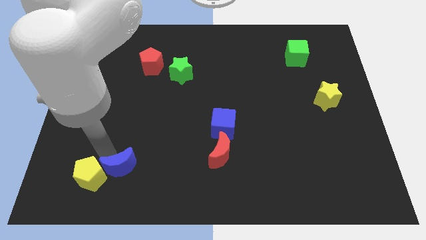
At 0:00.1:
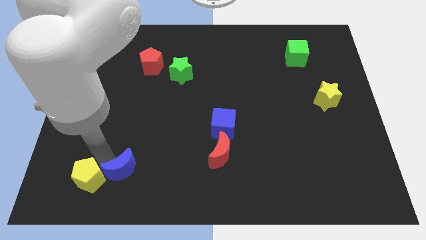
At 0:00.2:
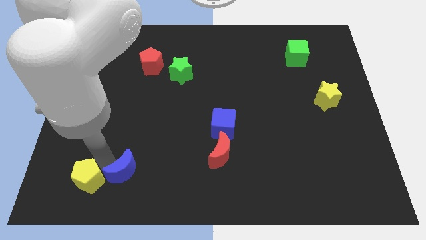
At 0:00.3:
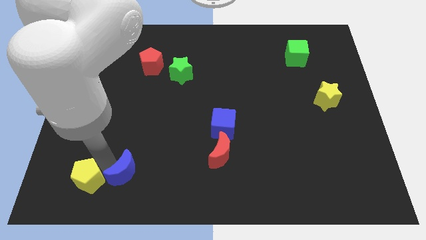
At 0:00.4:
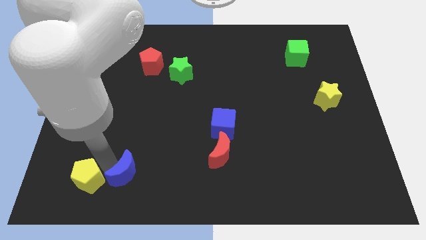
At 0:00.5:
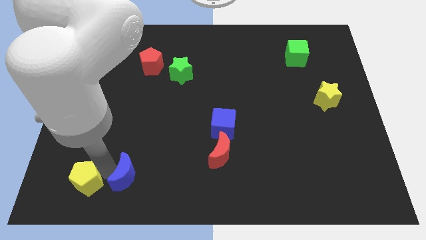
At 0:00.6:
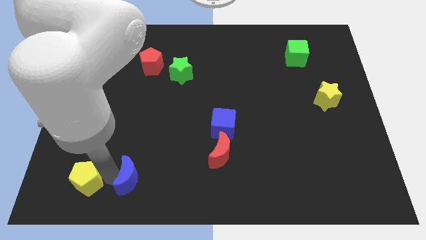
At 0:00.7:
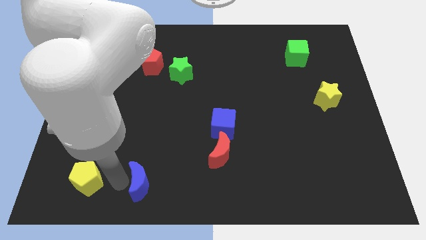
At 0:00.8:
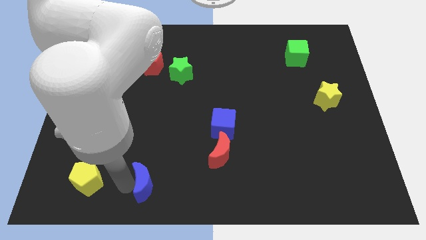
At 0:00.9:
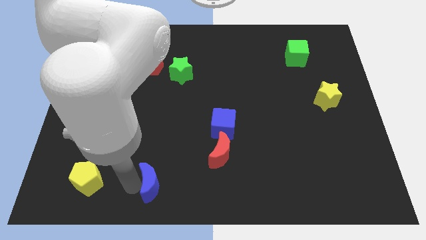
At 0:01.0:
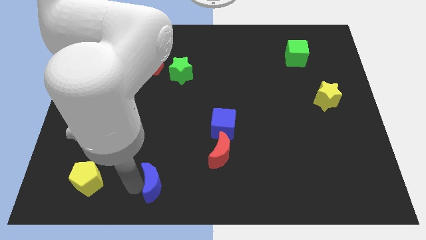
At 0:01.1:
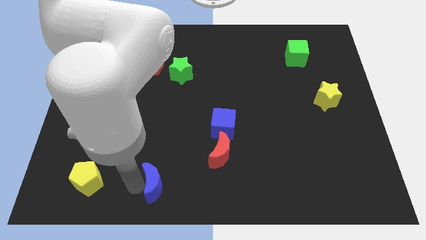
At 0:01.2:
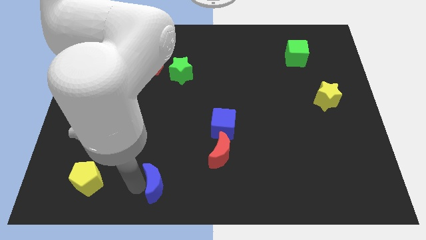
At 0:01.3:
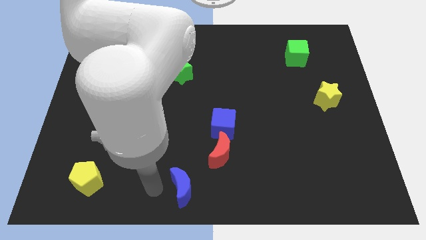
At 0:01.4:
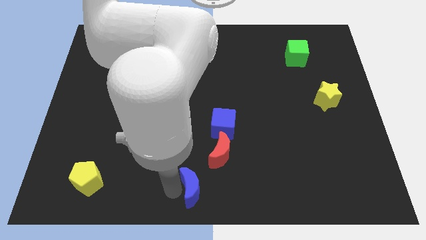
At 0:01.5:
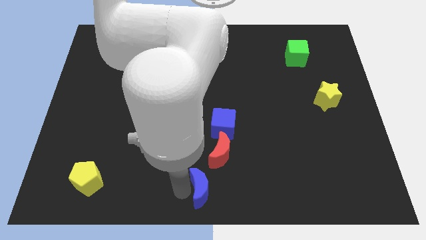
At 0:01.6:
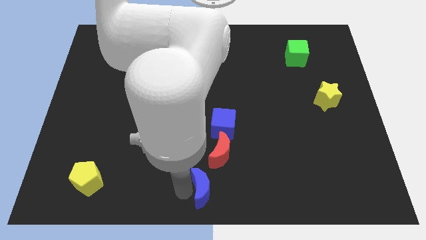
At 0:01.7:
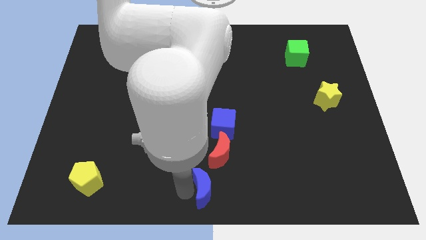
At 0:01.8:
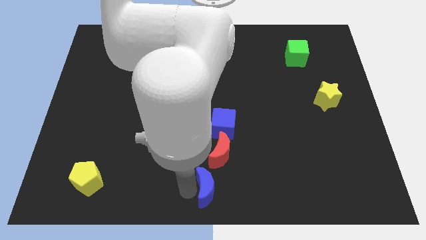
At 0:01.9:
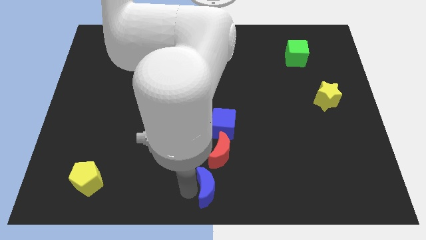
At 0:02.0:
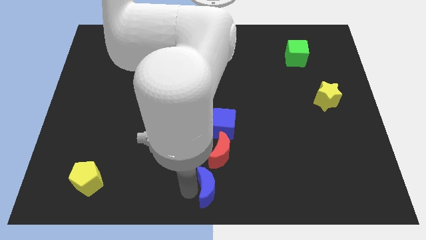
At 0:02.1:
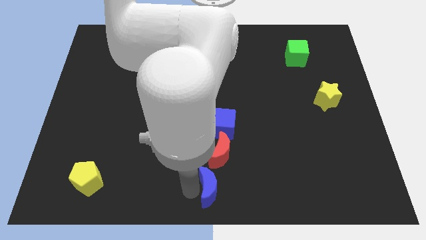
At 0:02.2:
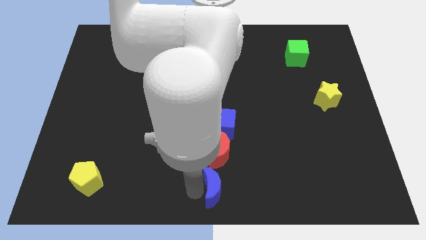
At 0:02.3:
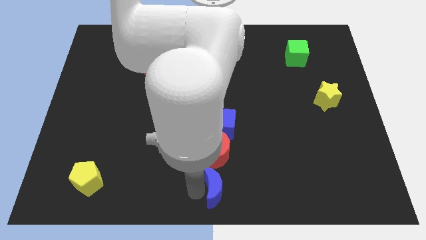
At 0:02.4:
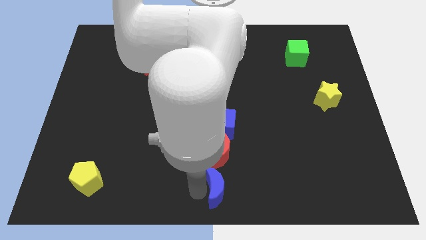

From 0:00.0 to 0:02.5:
place the blue moon below the red moon

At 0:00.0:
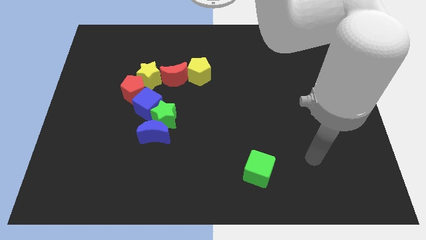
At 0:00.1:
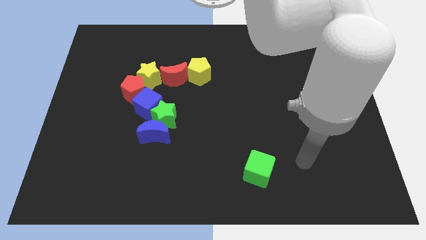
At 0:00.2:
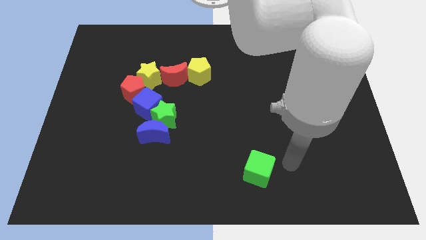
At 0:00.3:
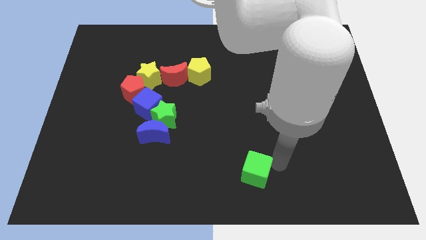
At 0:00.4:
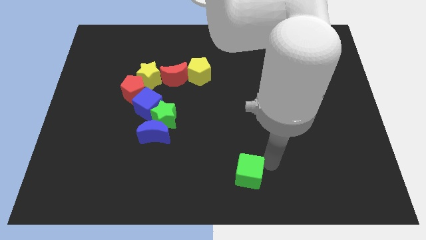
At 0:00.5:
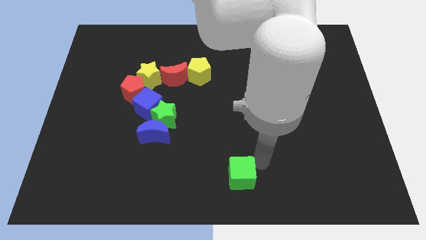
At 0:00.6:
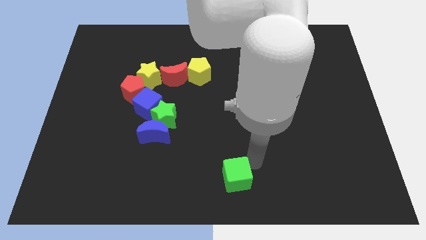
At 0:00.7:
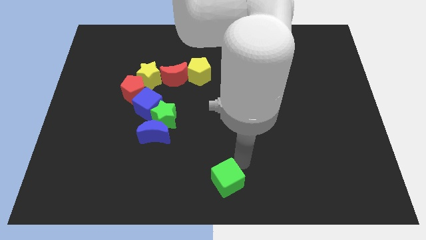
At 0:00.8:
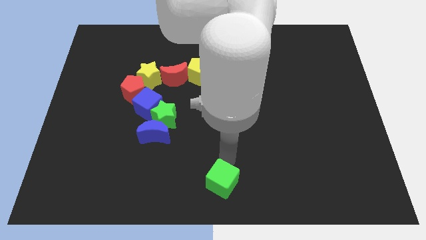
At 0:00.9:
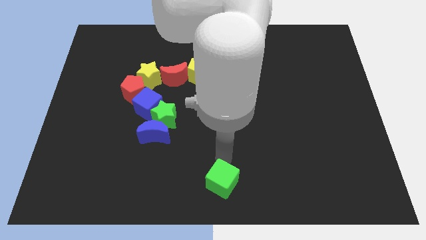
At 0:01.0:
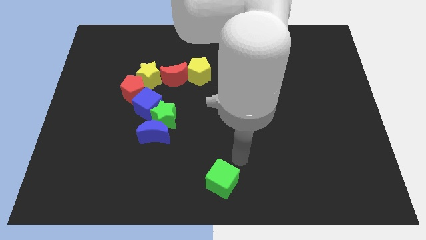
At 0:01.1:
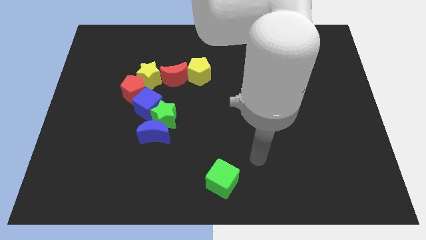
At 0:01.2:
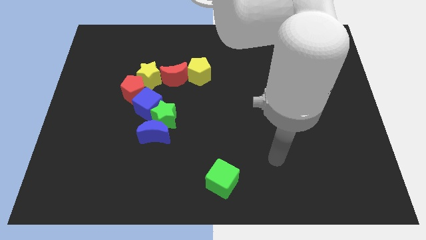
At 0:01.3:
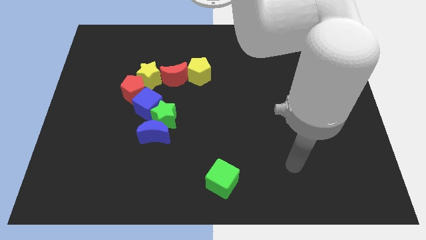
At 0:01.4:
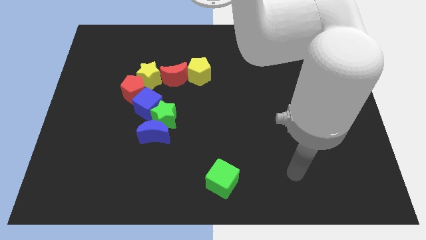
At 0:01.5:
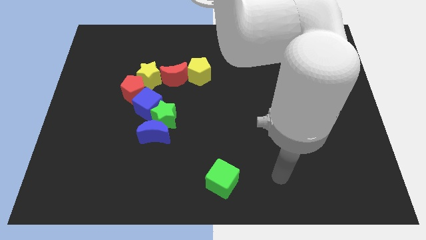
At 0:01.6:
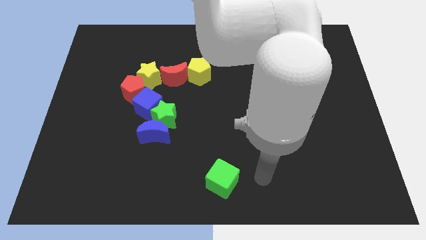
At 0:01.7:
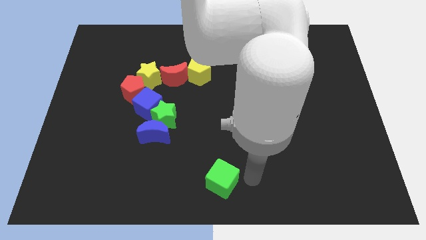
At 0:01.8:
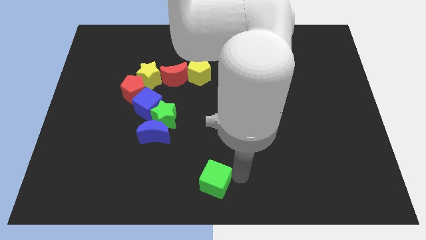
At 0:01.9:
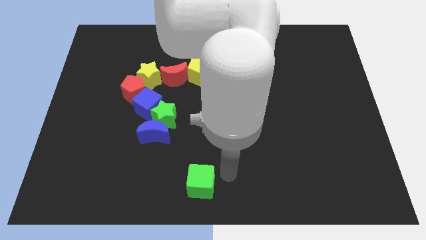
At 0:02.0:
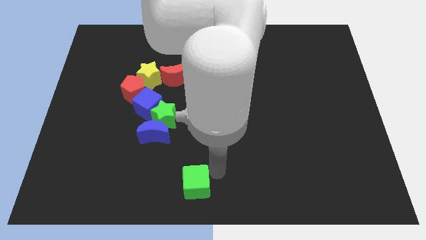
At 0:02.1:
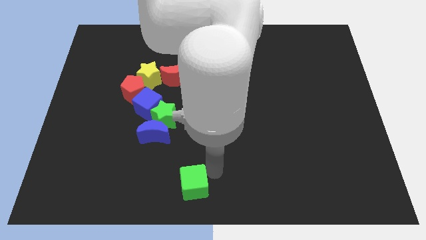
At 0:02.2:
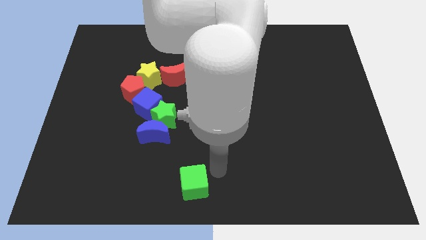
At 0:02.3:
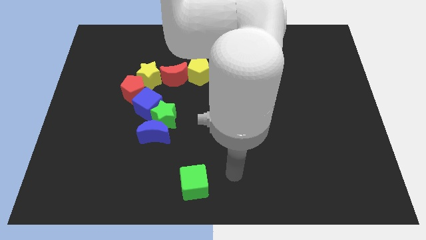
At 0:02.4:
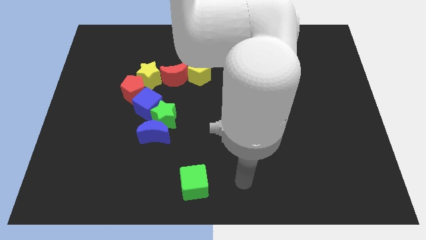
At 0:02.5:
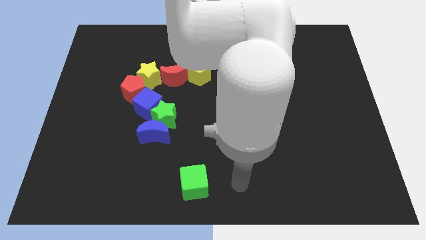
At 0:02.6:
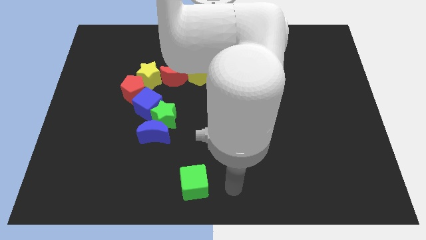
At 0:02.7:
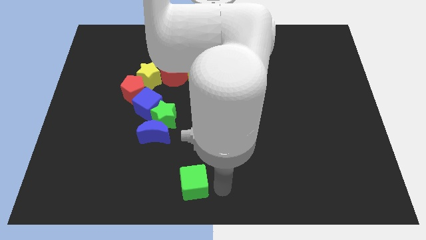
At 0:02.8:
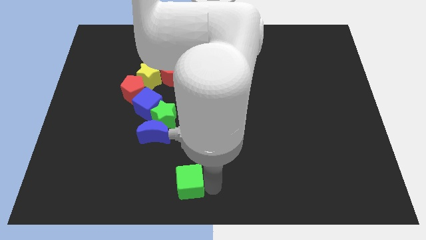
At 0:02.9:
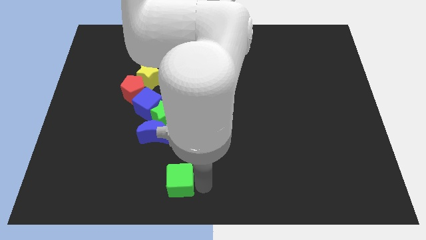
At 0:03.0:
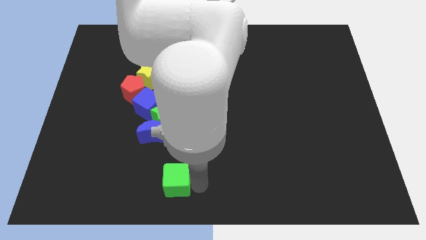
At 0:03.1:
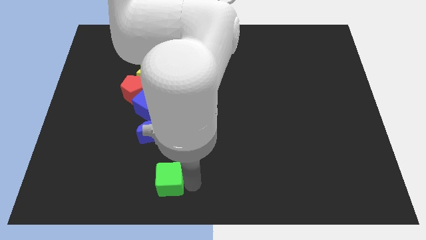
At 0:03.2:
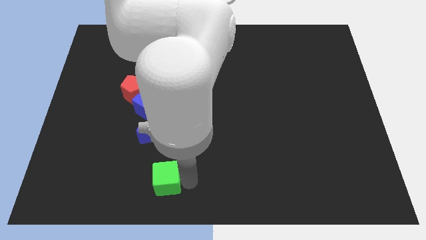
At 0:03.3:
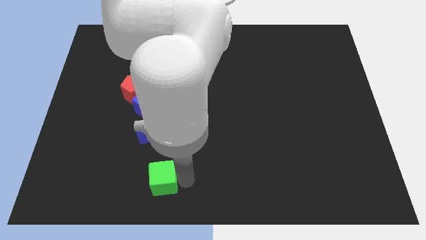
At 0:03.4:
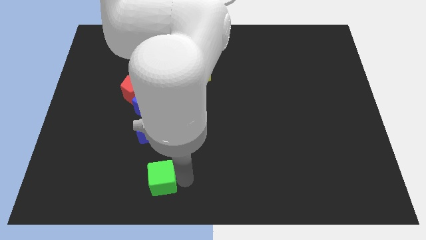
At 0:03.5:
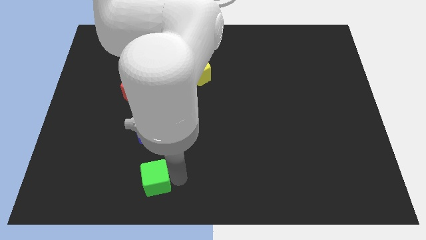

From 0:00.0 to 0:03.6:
push the green cube to the bottom of the blue crescent

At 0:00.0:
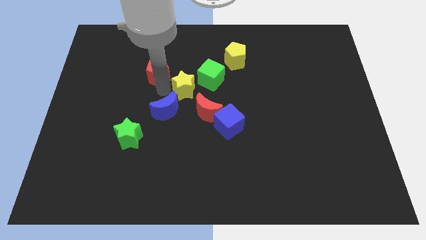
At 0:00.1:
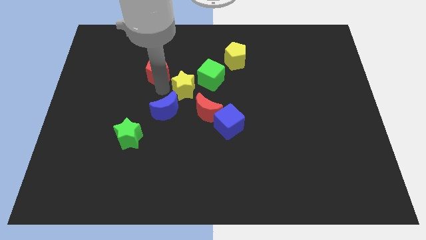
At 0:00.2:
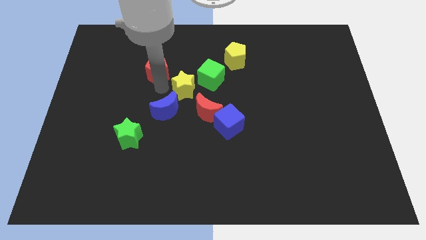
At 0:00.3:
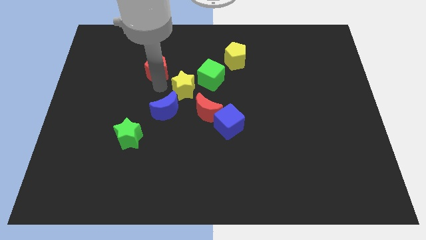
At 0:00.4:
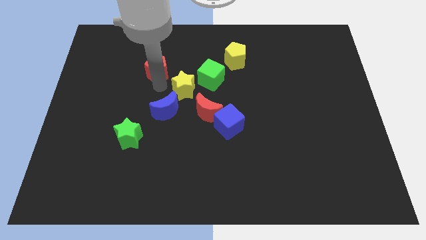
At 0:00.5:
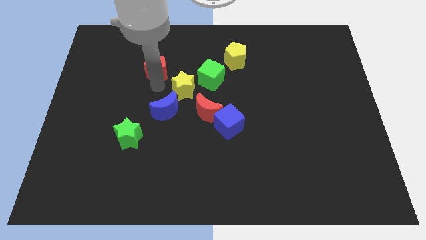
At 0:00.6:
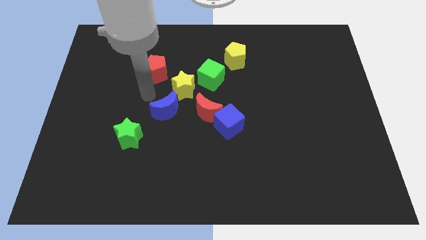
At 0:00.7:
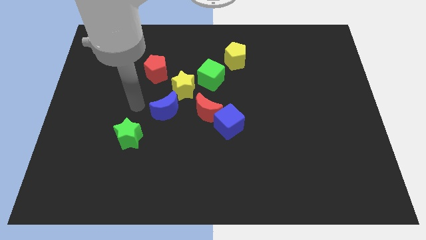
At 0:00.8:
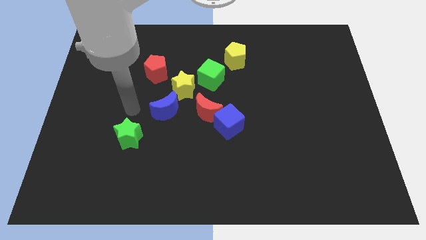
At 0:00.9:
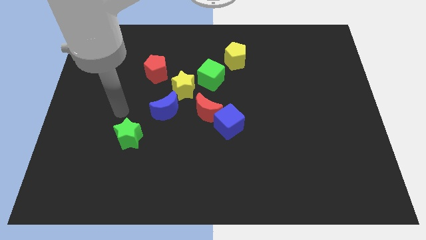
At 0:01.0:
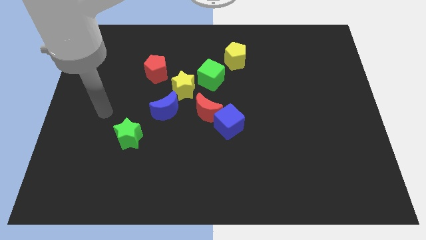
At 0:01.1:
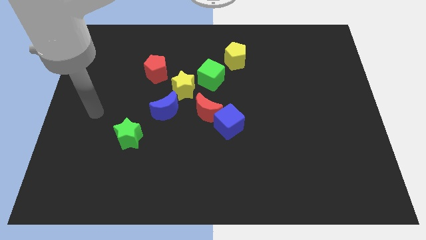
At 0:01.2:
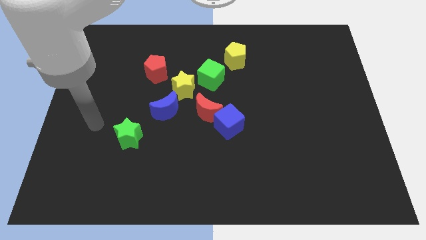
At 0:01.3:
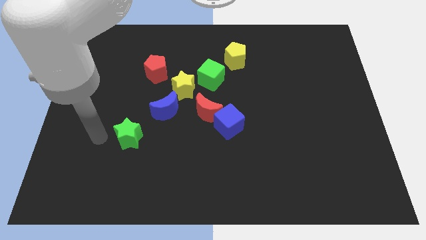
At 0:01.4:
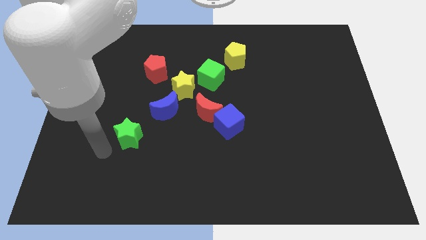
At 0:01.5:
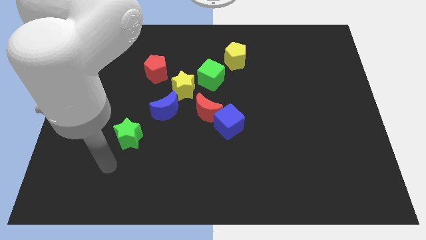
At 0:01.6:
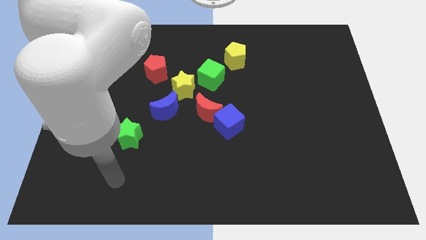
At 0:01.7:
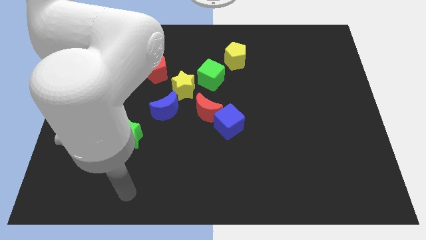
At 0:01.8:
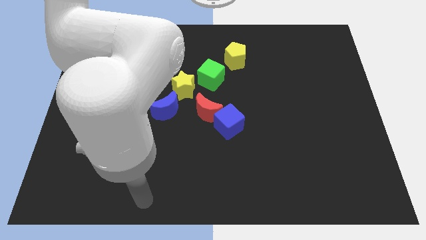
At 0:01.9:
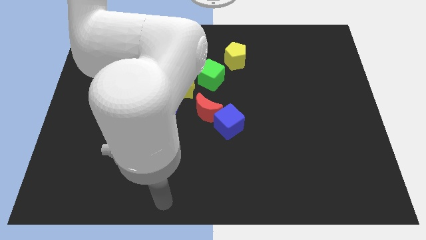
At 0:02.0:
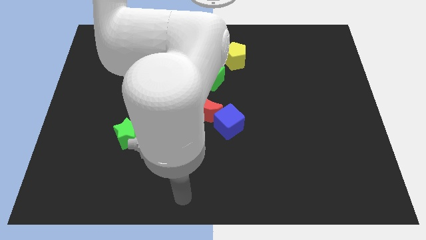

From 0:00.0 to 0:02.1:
move your arm to the bottom center of the board

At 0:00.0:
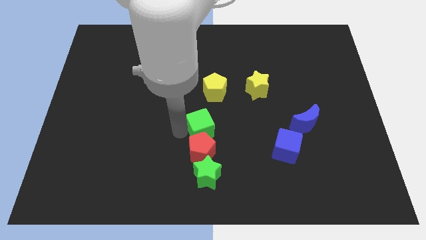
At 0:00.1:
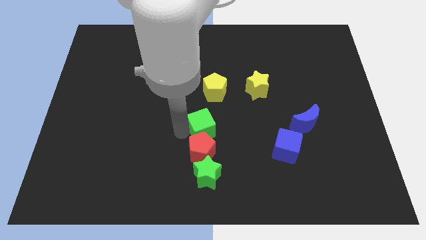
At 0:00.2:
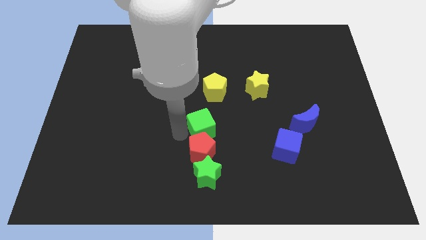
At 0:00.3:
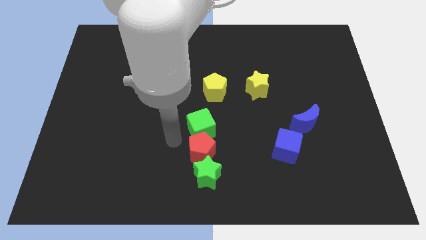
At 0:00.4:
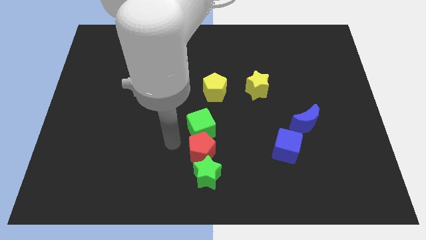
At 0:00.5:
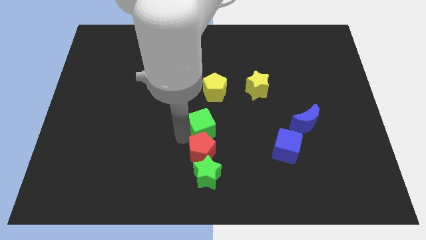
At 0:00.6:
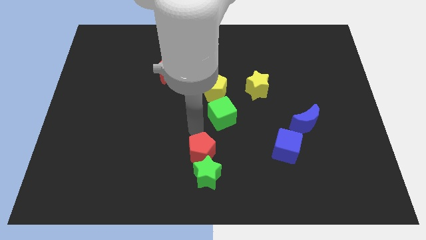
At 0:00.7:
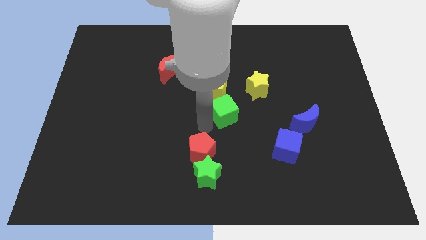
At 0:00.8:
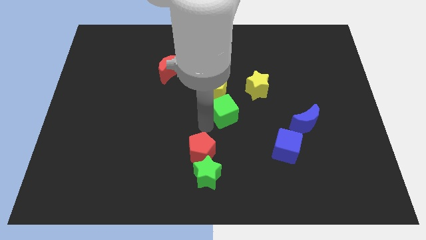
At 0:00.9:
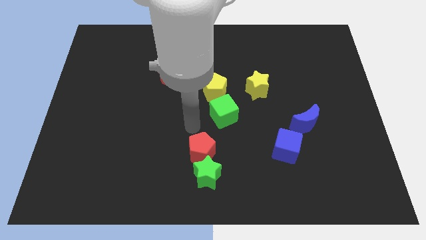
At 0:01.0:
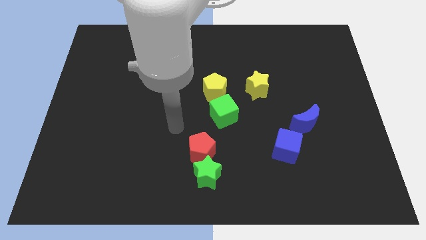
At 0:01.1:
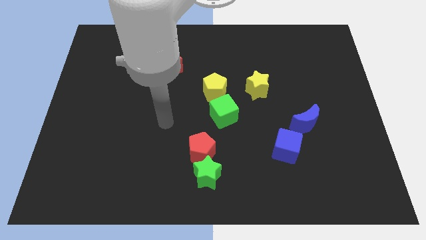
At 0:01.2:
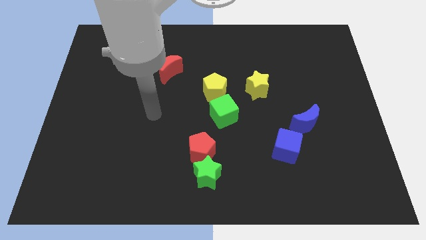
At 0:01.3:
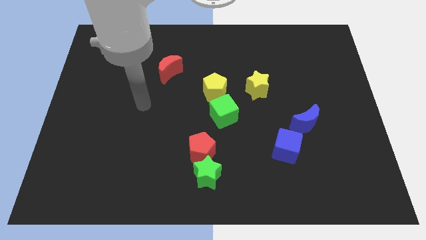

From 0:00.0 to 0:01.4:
put the green cube parallel left of the blue moon
